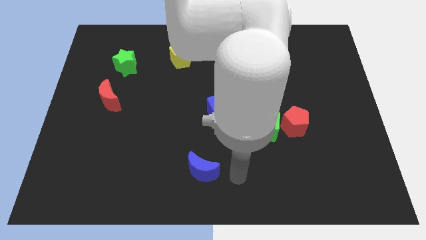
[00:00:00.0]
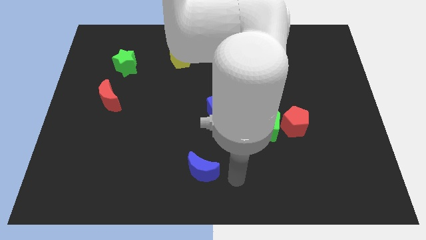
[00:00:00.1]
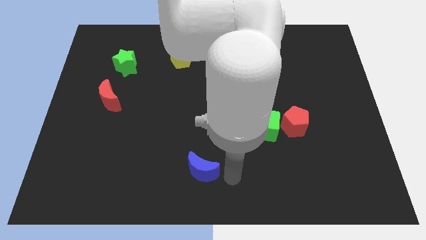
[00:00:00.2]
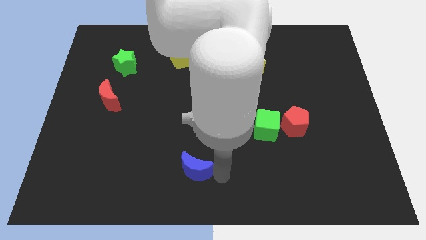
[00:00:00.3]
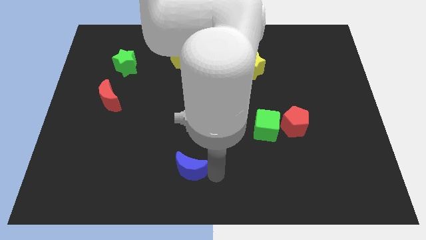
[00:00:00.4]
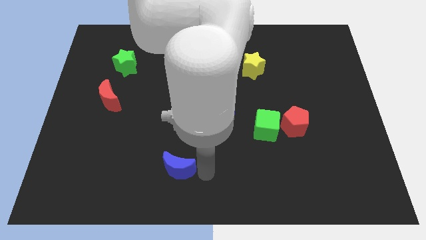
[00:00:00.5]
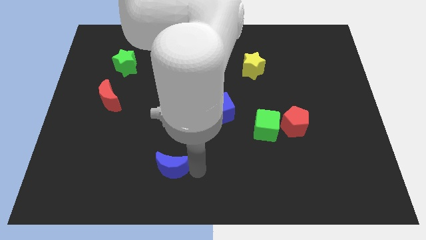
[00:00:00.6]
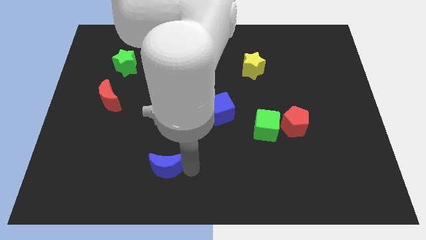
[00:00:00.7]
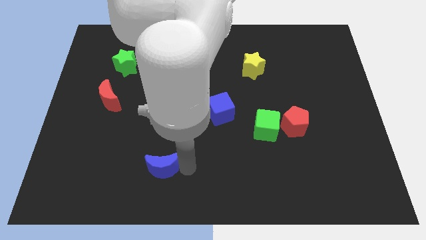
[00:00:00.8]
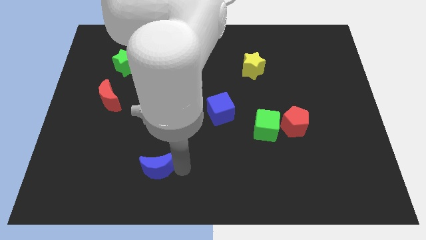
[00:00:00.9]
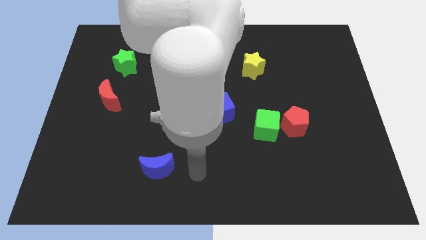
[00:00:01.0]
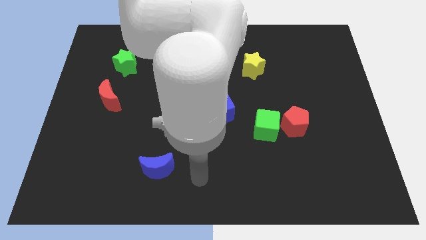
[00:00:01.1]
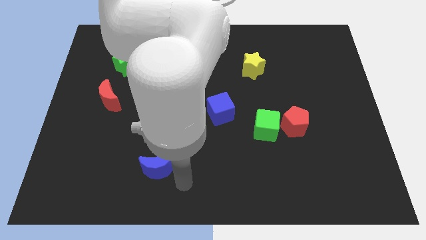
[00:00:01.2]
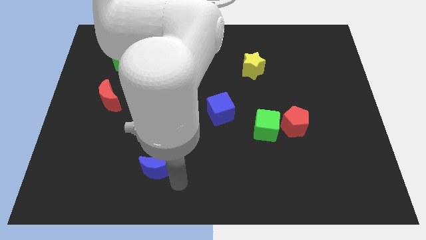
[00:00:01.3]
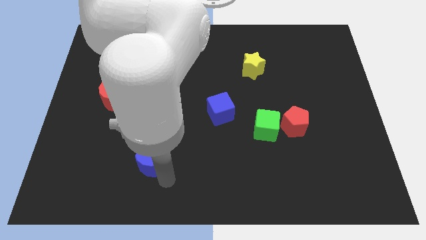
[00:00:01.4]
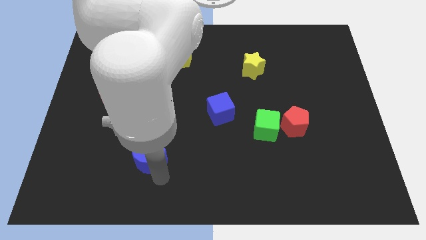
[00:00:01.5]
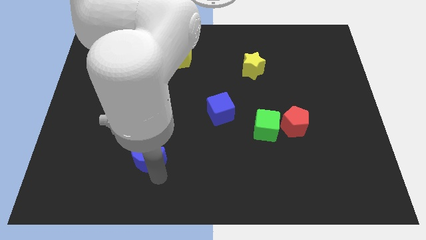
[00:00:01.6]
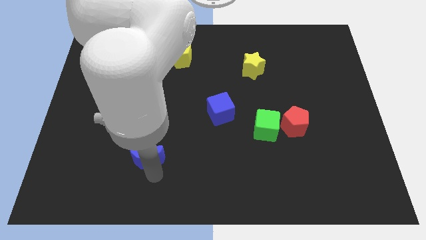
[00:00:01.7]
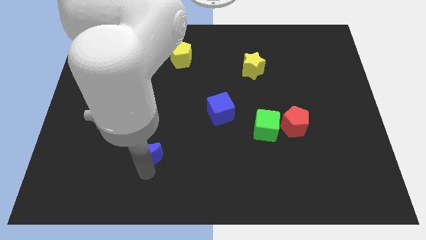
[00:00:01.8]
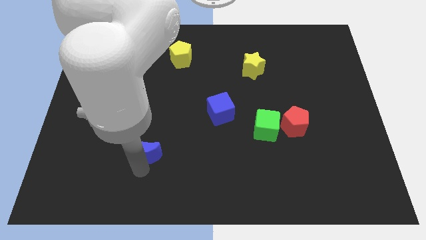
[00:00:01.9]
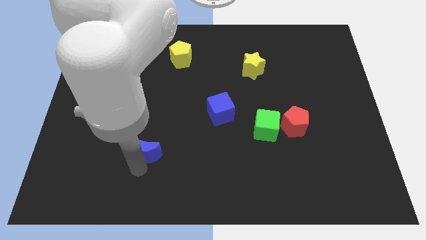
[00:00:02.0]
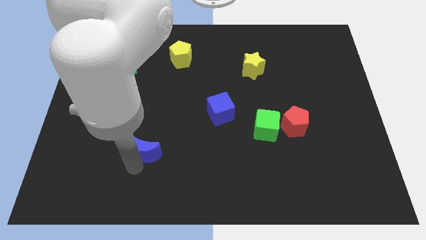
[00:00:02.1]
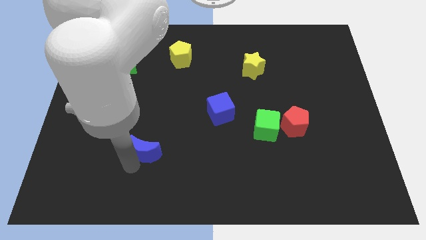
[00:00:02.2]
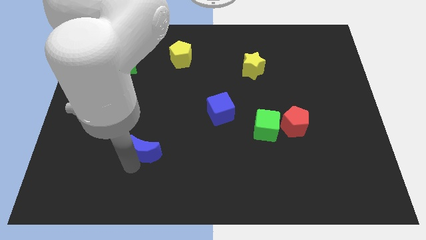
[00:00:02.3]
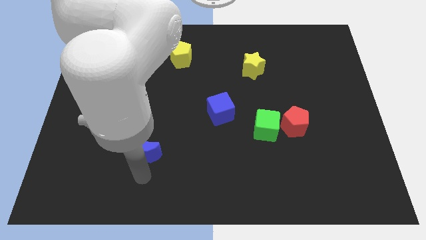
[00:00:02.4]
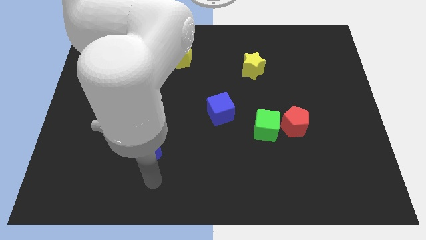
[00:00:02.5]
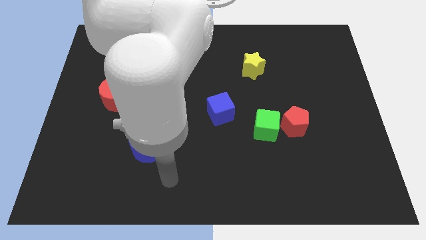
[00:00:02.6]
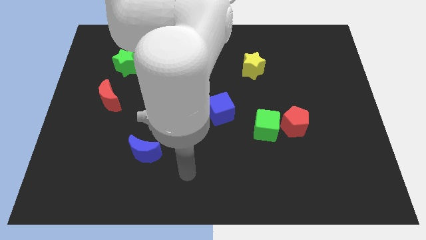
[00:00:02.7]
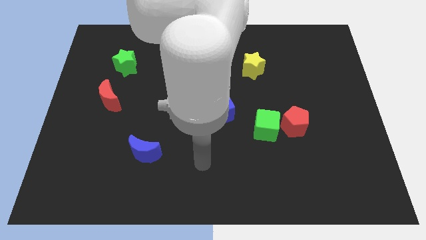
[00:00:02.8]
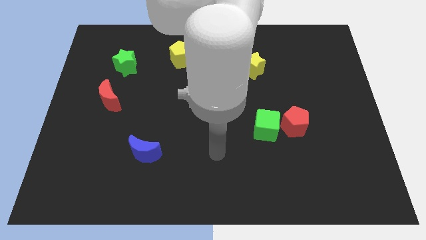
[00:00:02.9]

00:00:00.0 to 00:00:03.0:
place the blue moon diagonally bottom right to the red moon

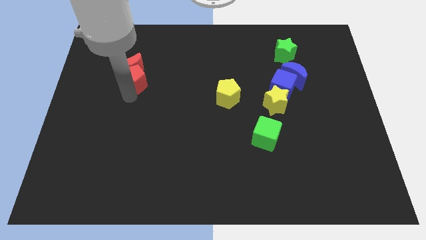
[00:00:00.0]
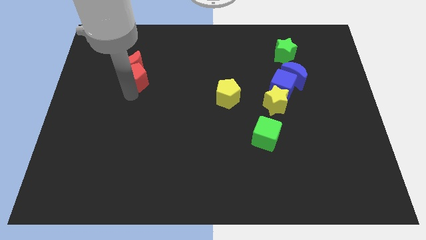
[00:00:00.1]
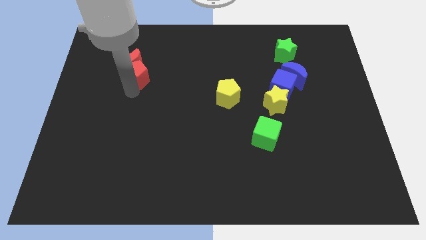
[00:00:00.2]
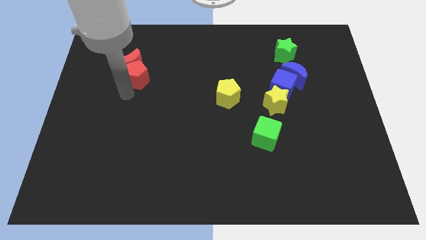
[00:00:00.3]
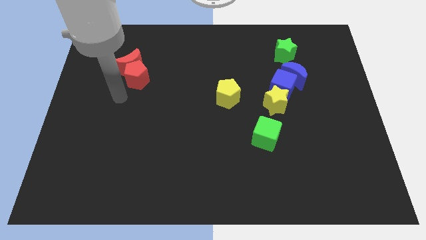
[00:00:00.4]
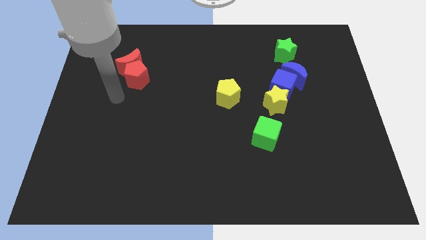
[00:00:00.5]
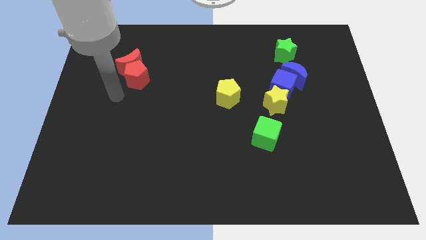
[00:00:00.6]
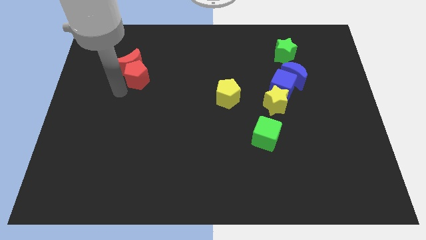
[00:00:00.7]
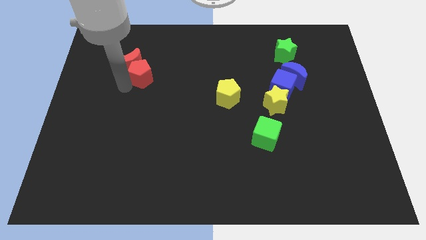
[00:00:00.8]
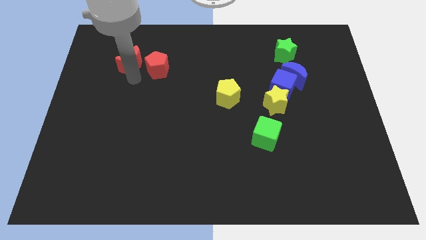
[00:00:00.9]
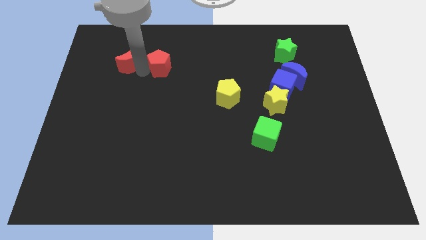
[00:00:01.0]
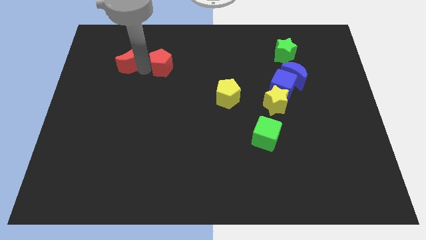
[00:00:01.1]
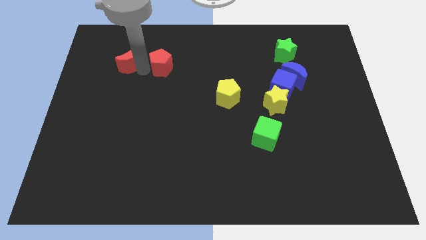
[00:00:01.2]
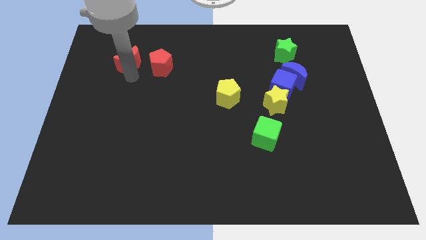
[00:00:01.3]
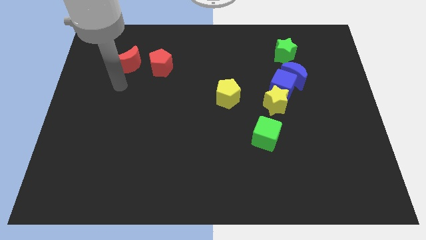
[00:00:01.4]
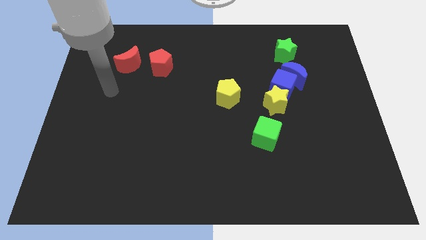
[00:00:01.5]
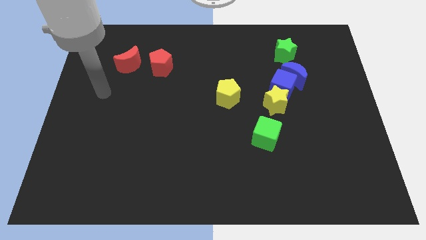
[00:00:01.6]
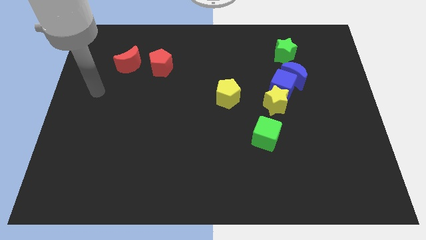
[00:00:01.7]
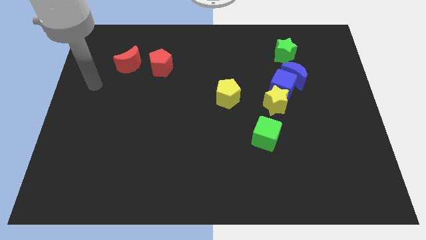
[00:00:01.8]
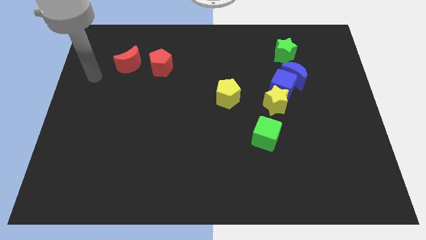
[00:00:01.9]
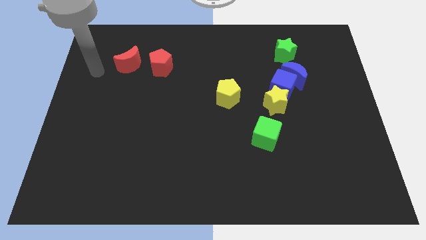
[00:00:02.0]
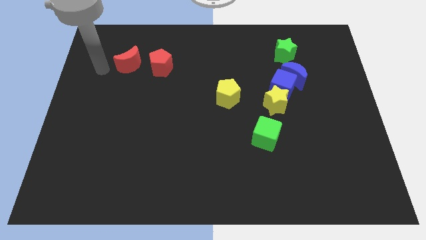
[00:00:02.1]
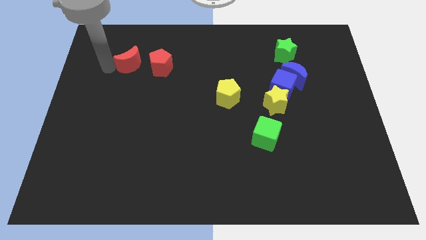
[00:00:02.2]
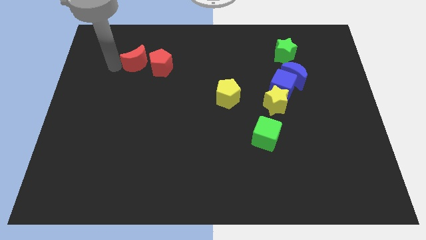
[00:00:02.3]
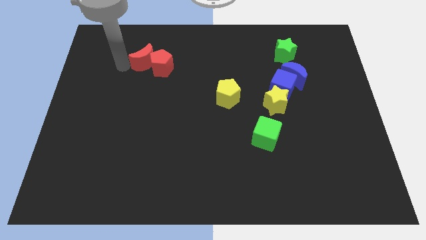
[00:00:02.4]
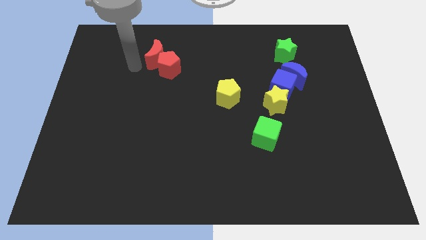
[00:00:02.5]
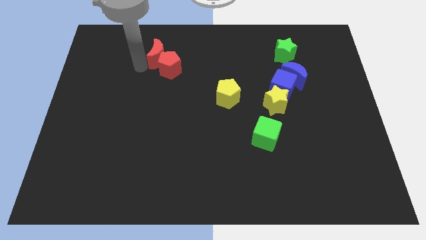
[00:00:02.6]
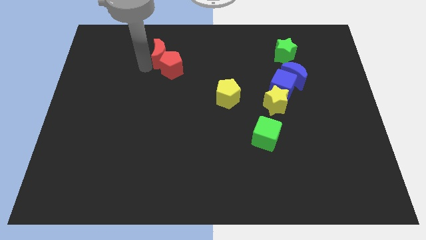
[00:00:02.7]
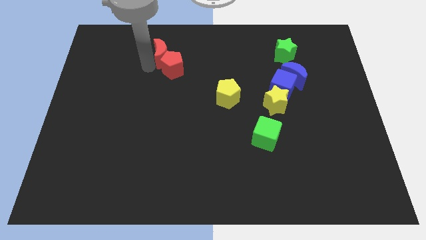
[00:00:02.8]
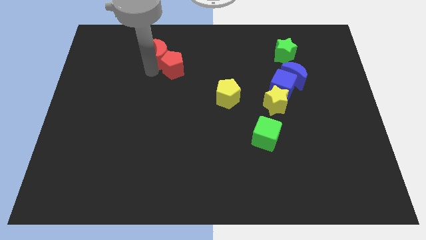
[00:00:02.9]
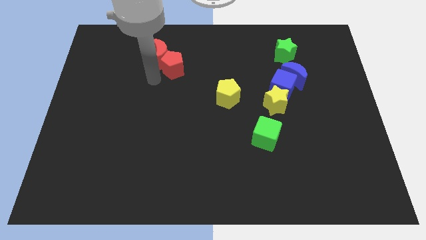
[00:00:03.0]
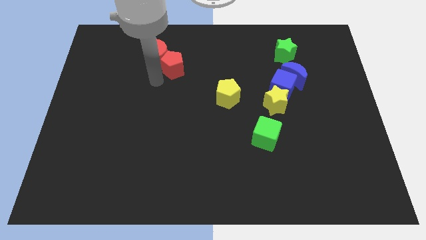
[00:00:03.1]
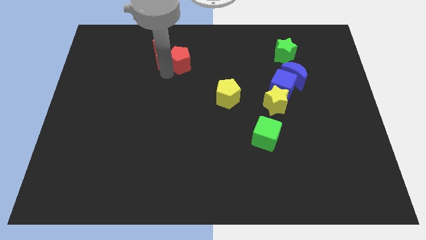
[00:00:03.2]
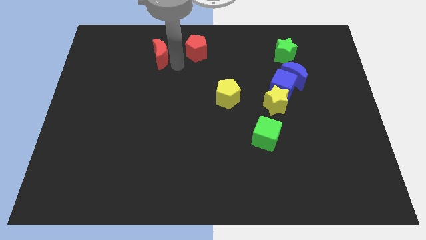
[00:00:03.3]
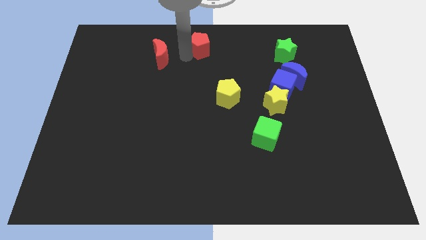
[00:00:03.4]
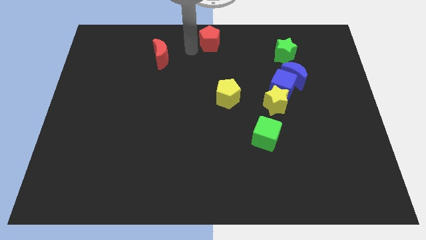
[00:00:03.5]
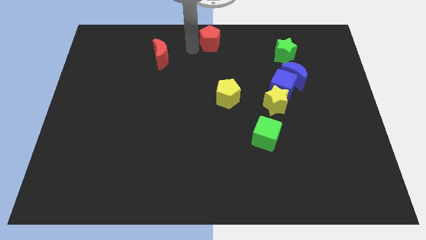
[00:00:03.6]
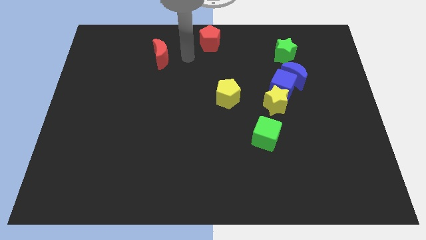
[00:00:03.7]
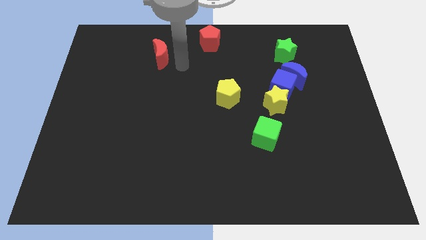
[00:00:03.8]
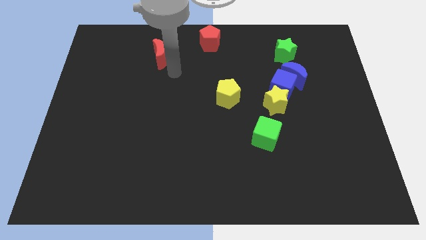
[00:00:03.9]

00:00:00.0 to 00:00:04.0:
push the red pentagon away from the red moon

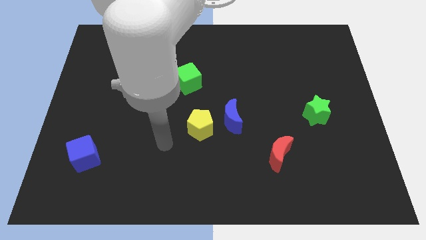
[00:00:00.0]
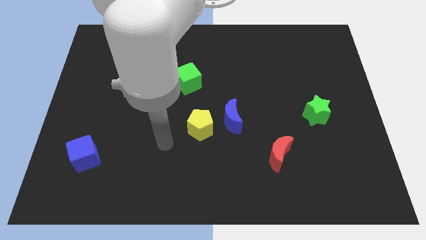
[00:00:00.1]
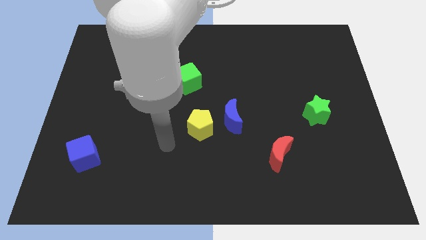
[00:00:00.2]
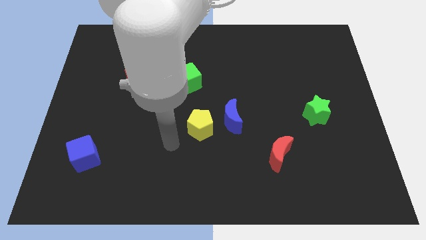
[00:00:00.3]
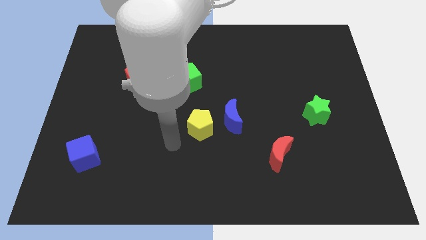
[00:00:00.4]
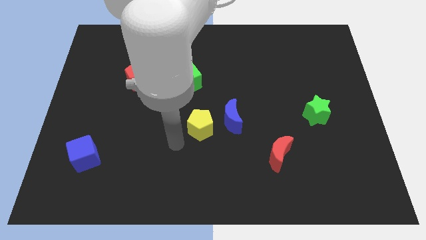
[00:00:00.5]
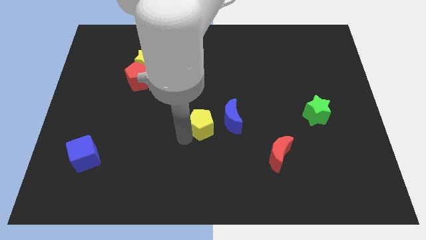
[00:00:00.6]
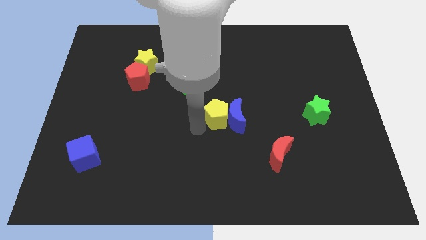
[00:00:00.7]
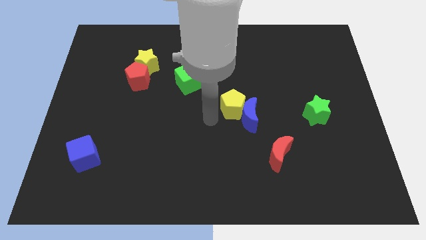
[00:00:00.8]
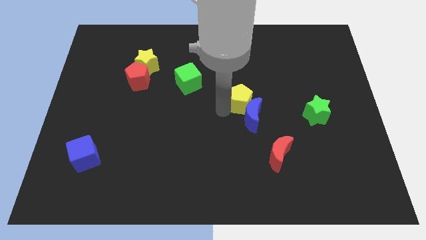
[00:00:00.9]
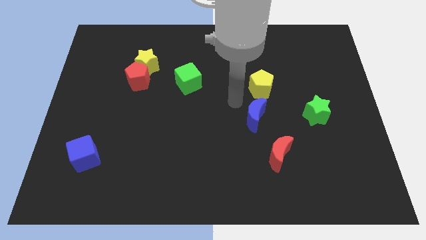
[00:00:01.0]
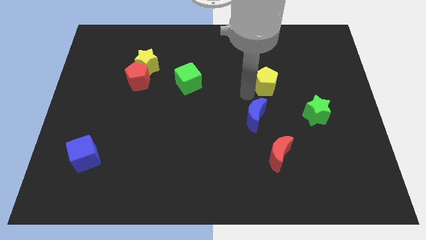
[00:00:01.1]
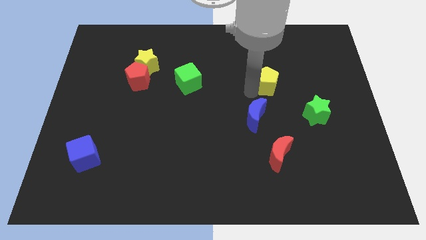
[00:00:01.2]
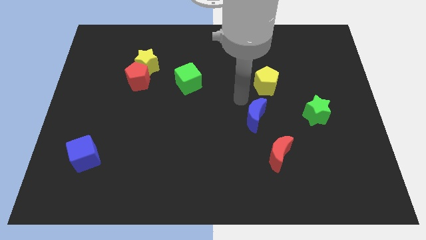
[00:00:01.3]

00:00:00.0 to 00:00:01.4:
move the yellow pentagon to the top of the blue crescent

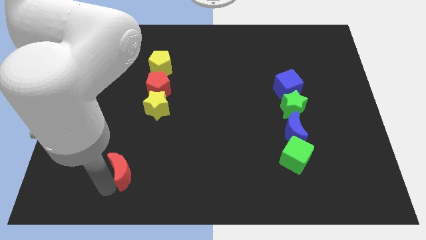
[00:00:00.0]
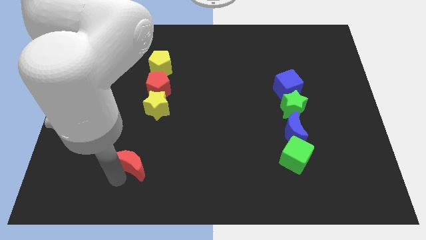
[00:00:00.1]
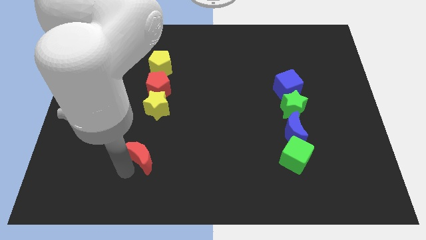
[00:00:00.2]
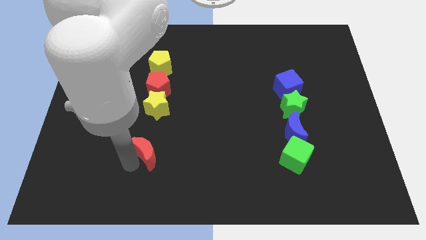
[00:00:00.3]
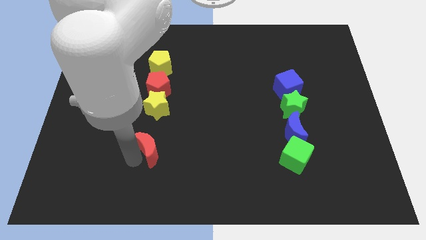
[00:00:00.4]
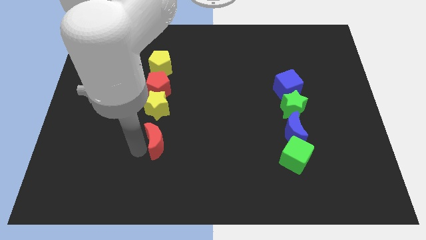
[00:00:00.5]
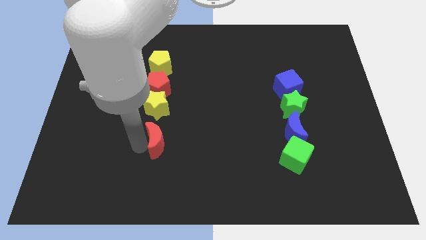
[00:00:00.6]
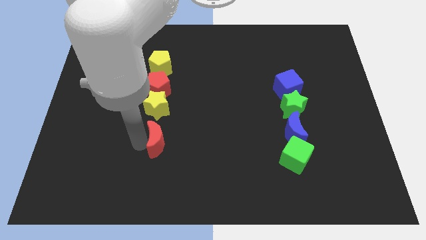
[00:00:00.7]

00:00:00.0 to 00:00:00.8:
move red moon below yellow star
